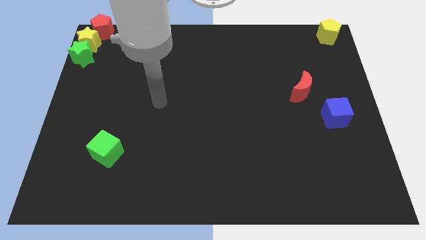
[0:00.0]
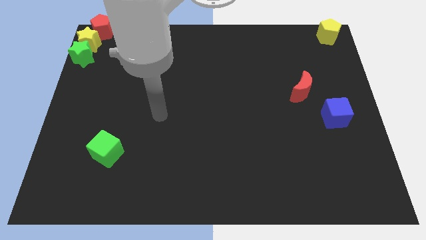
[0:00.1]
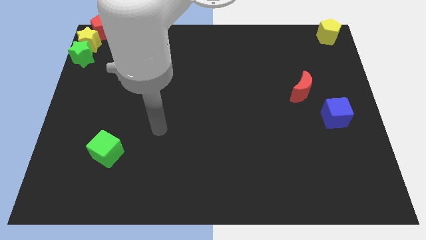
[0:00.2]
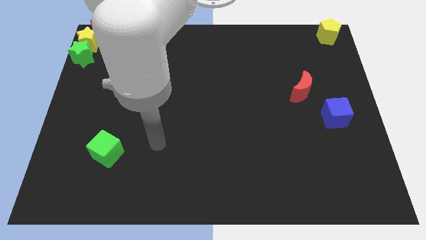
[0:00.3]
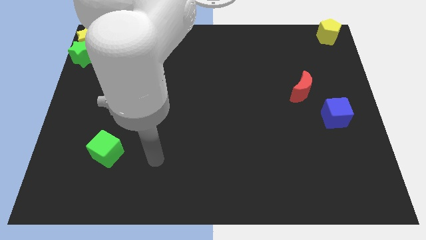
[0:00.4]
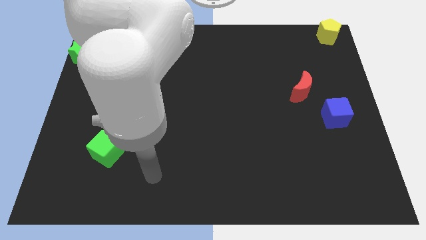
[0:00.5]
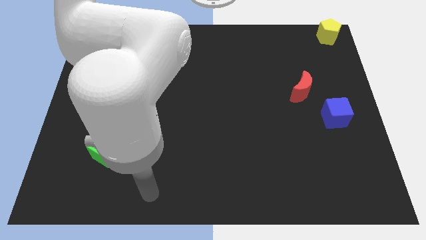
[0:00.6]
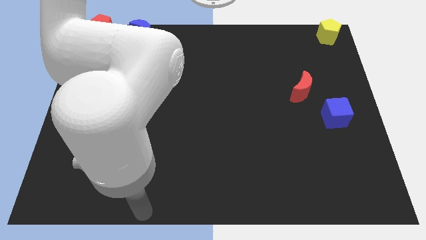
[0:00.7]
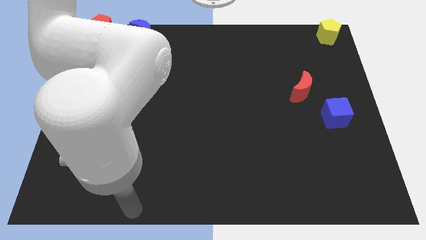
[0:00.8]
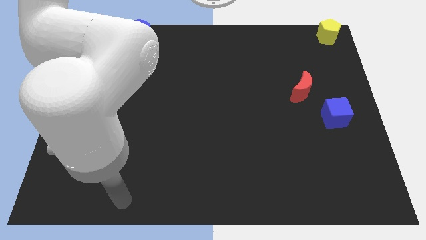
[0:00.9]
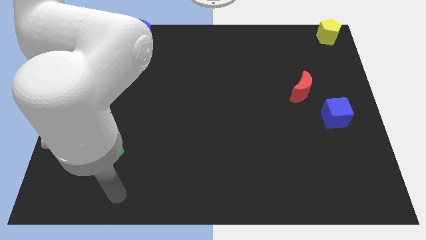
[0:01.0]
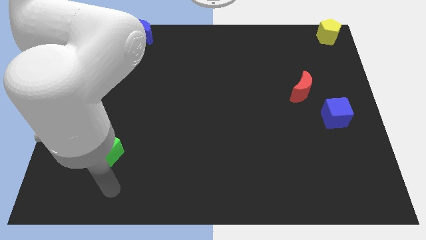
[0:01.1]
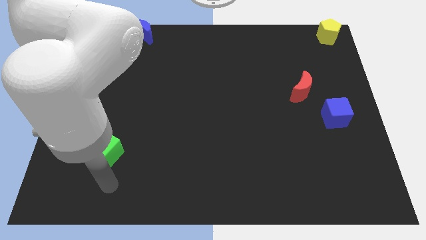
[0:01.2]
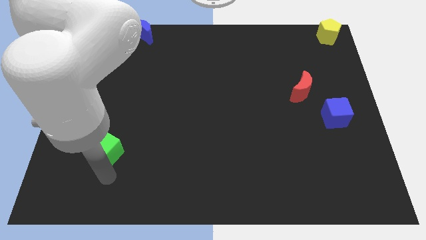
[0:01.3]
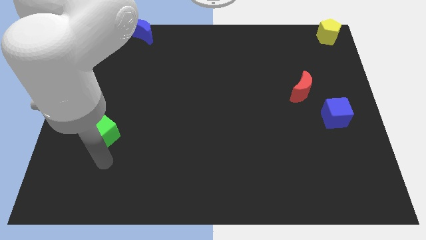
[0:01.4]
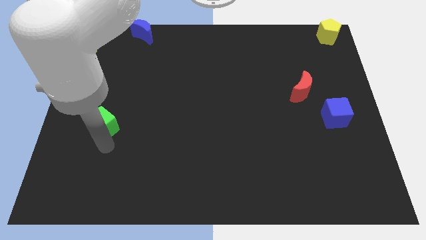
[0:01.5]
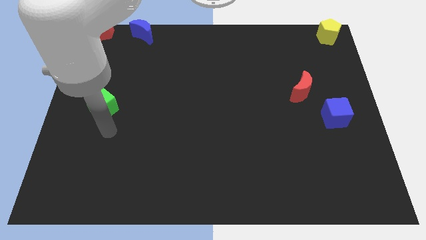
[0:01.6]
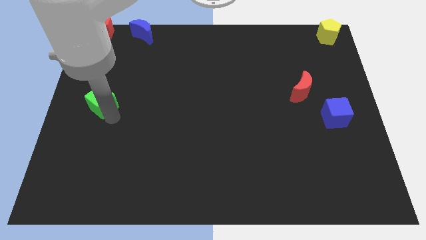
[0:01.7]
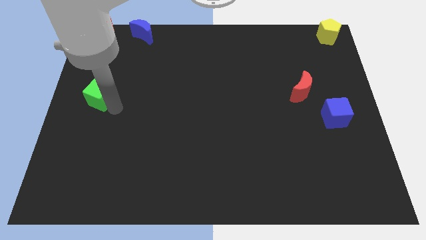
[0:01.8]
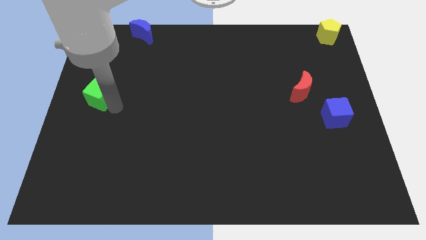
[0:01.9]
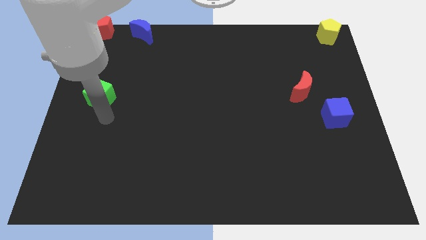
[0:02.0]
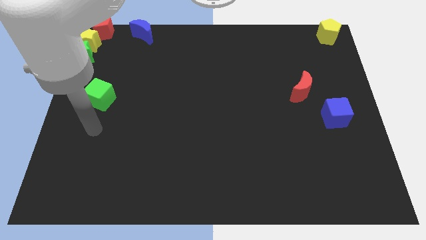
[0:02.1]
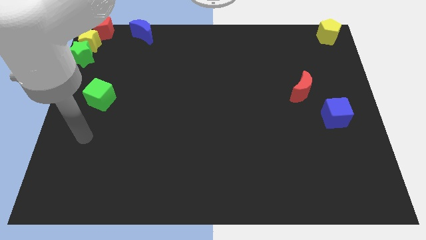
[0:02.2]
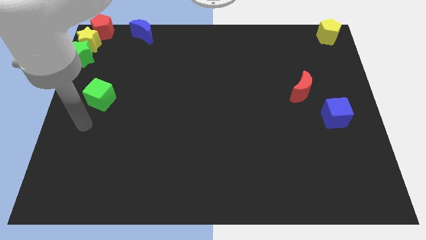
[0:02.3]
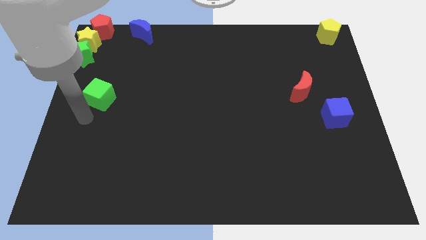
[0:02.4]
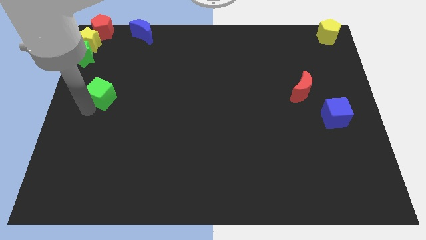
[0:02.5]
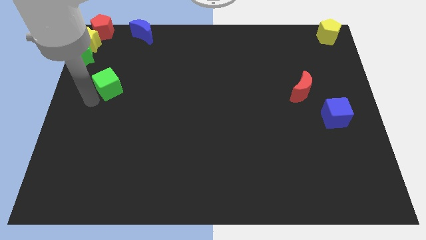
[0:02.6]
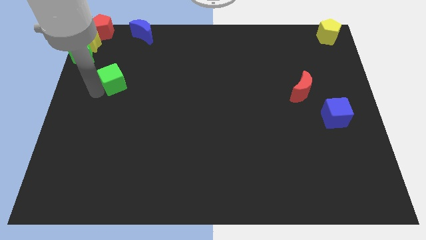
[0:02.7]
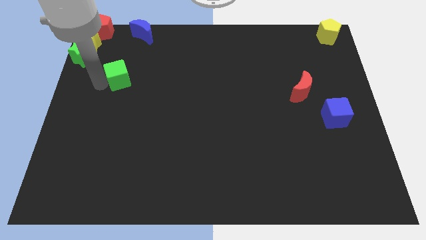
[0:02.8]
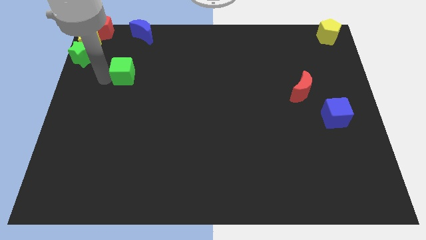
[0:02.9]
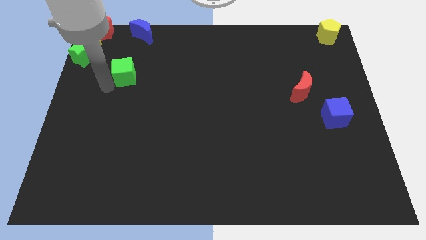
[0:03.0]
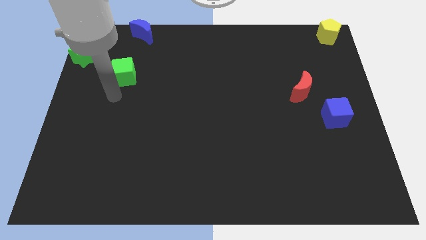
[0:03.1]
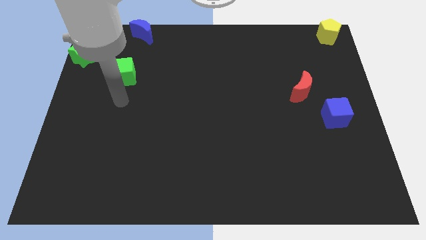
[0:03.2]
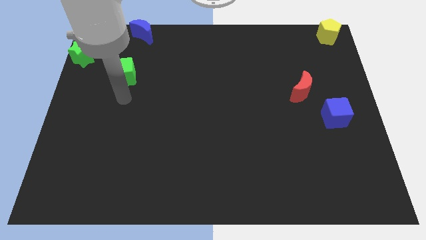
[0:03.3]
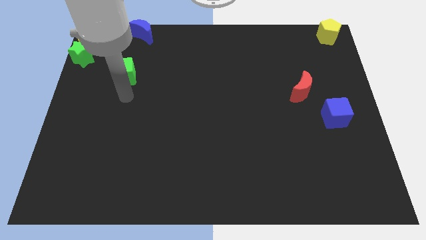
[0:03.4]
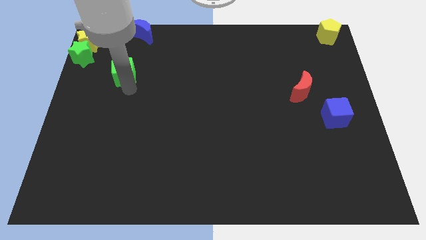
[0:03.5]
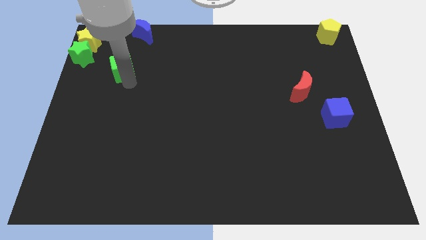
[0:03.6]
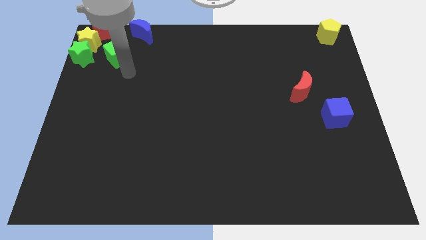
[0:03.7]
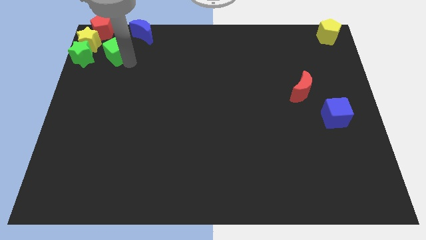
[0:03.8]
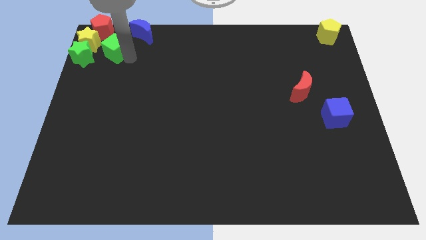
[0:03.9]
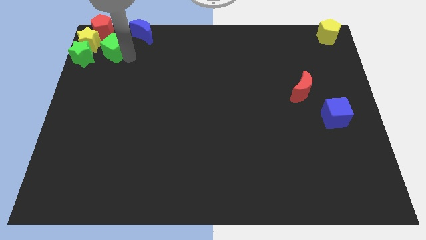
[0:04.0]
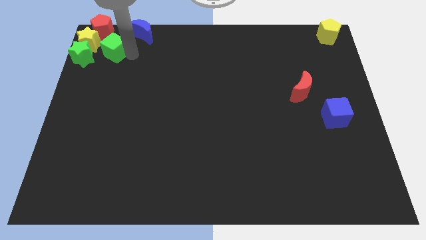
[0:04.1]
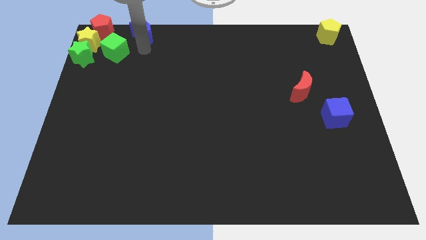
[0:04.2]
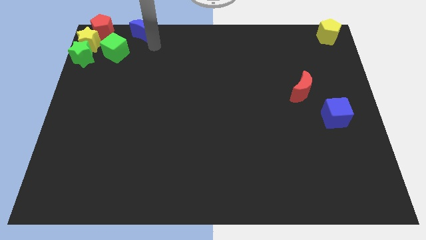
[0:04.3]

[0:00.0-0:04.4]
move the green cube to the right of the yellow star

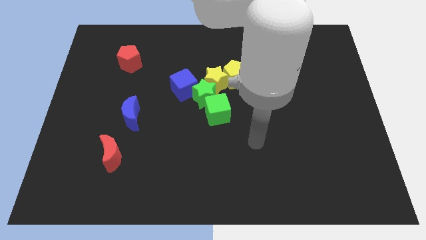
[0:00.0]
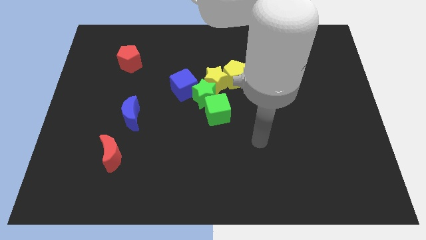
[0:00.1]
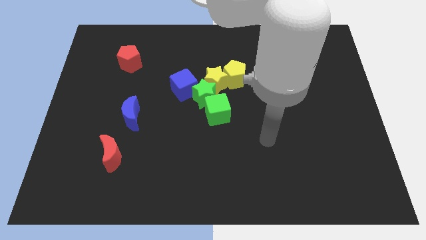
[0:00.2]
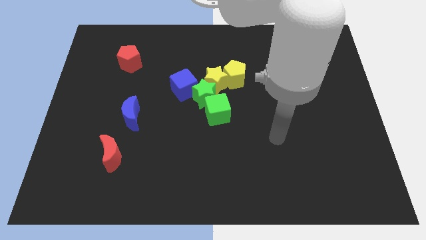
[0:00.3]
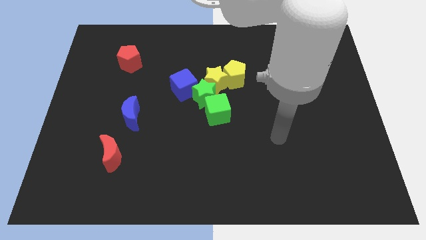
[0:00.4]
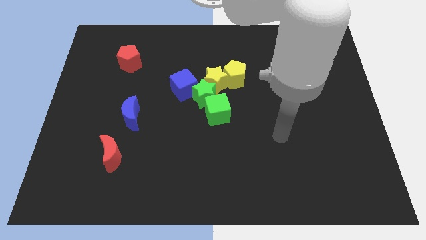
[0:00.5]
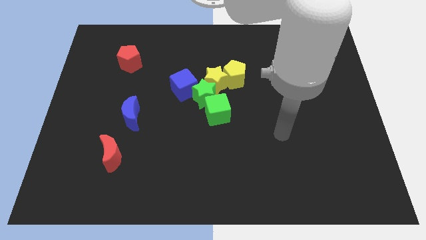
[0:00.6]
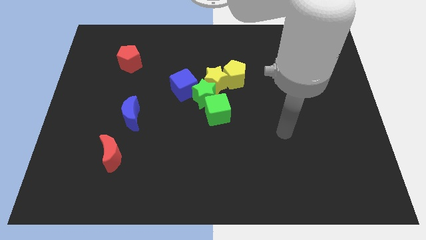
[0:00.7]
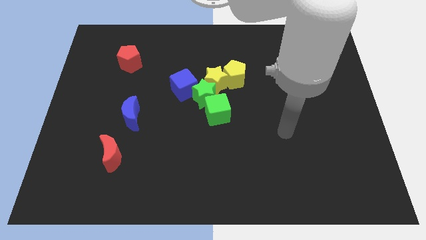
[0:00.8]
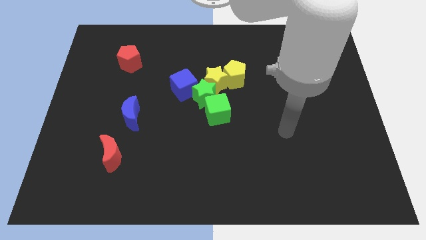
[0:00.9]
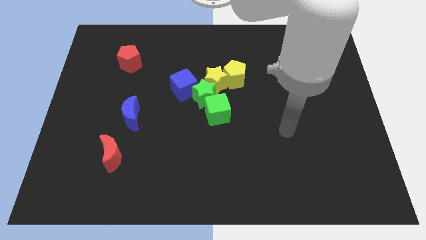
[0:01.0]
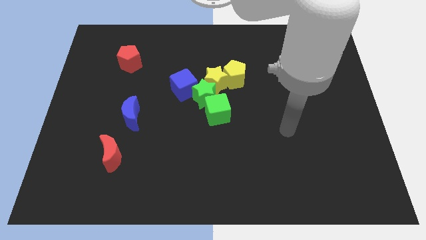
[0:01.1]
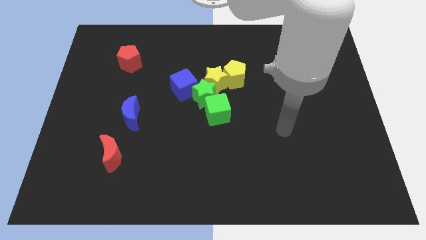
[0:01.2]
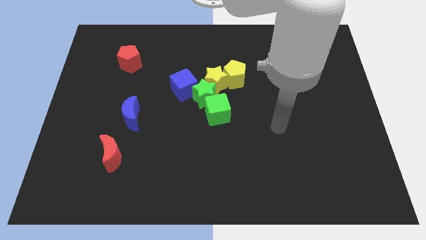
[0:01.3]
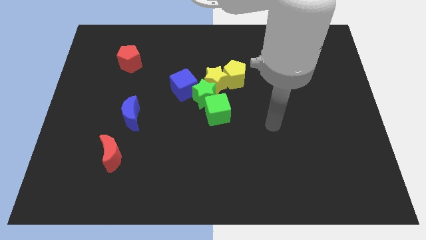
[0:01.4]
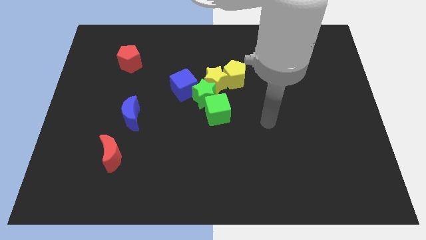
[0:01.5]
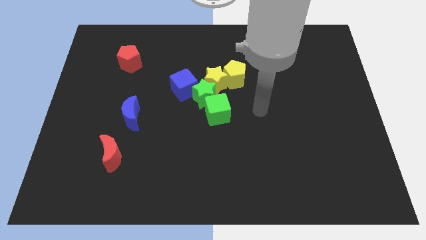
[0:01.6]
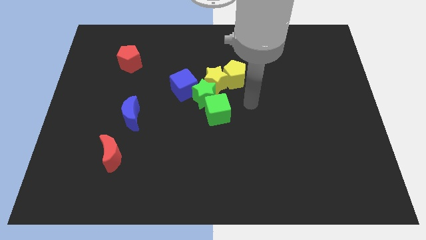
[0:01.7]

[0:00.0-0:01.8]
point your arm at the right side of the green cube

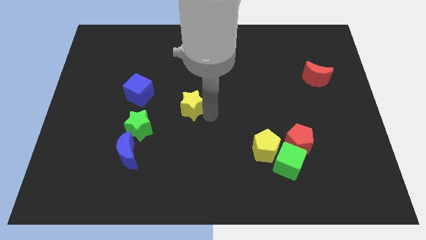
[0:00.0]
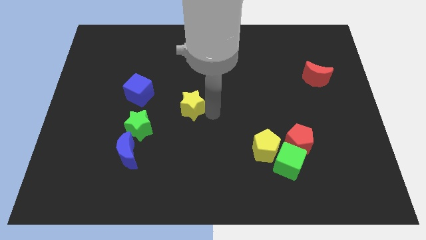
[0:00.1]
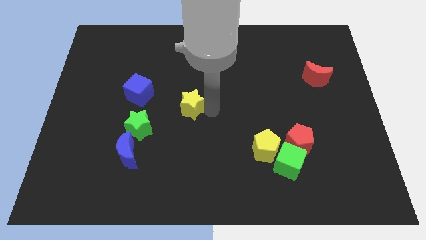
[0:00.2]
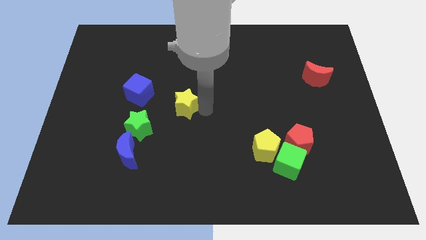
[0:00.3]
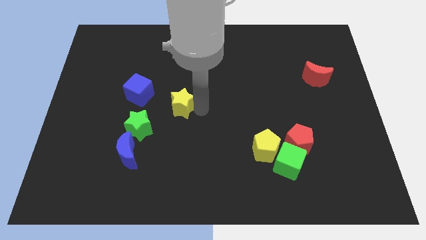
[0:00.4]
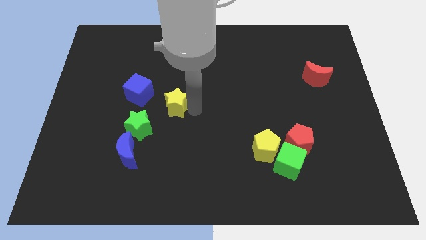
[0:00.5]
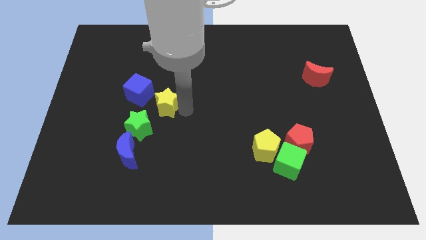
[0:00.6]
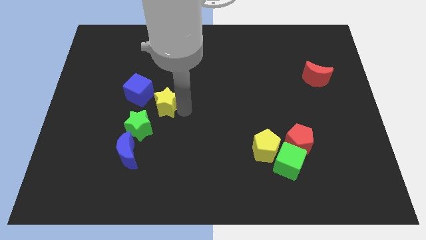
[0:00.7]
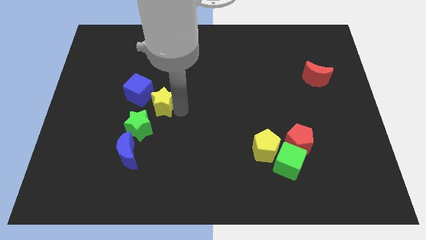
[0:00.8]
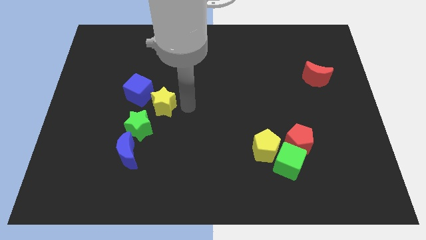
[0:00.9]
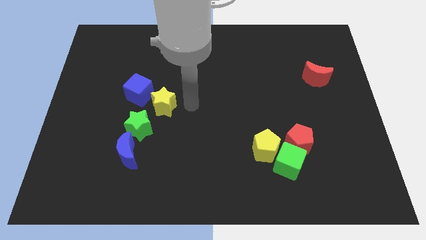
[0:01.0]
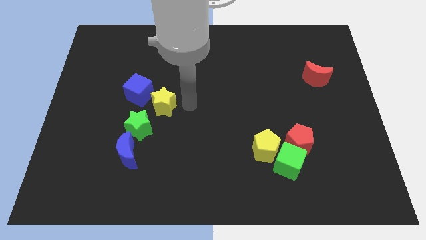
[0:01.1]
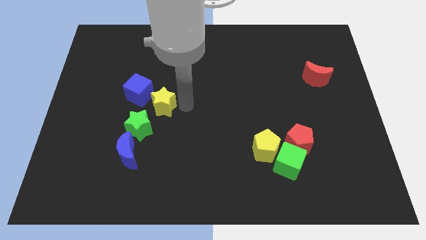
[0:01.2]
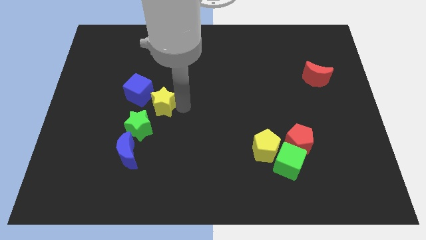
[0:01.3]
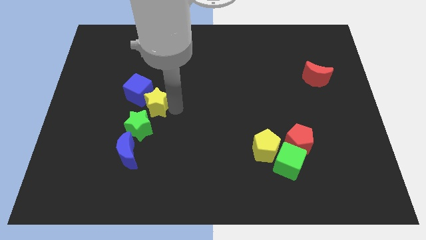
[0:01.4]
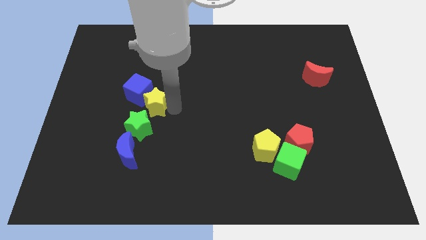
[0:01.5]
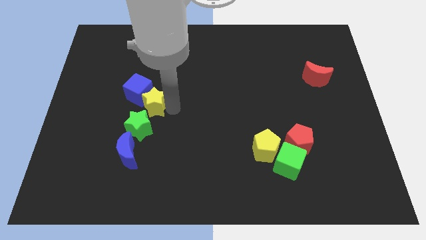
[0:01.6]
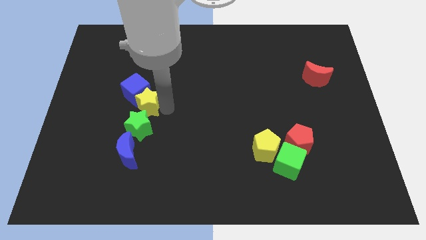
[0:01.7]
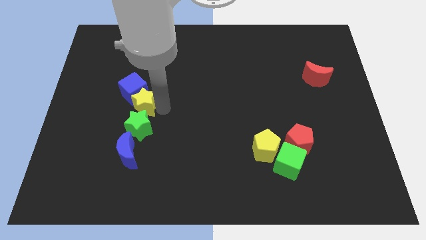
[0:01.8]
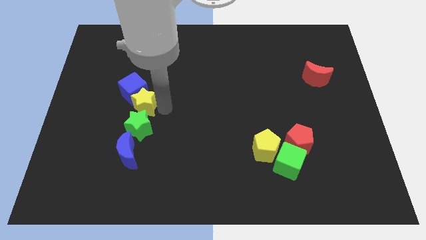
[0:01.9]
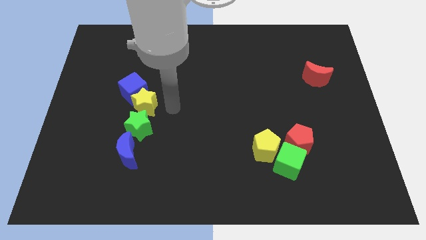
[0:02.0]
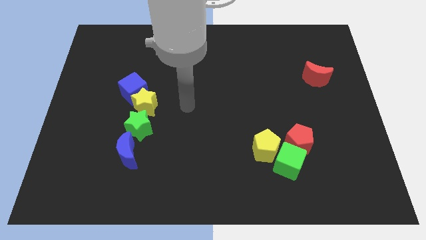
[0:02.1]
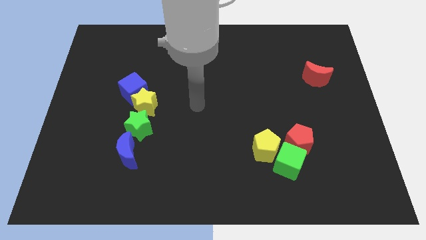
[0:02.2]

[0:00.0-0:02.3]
move the yellow star to right of the blue cube

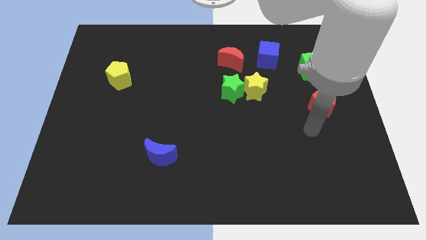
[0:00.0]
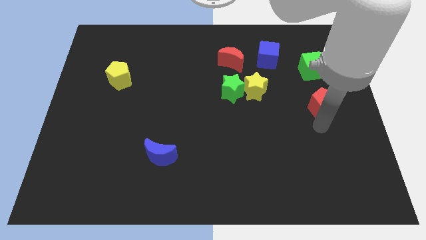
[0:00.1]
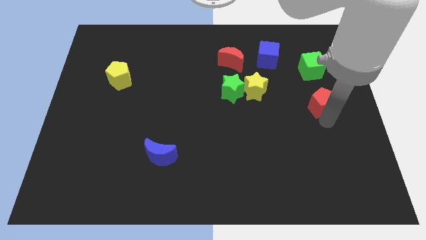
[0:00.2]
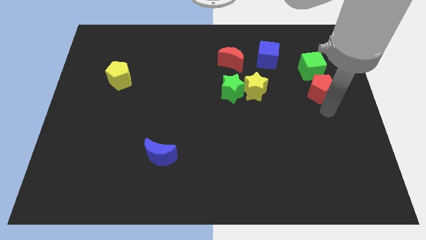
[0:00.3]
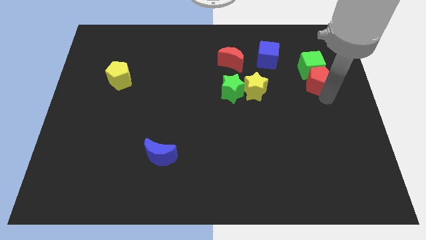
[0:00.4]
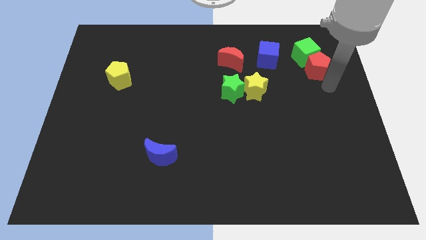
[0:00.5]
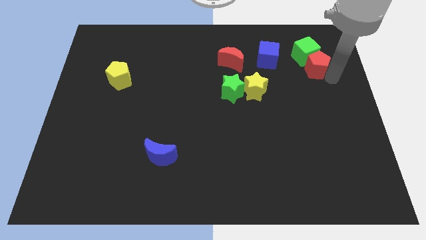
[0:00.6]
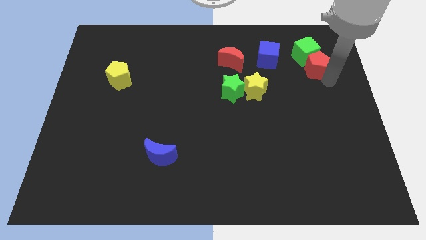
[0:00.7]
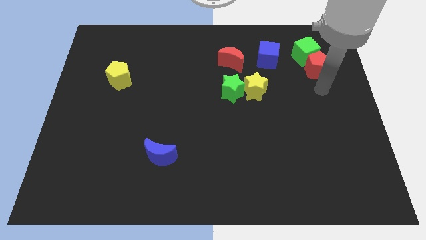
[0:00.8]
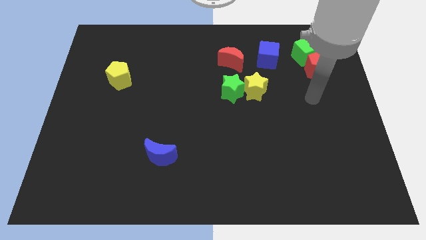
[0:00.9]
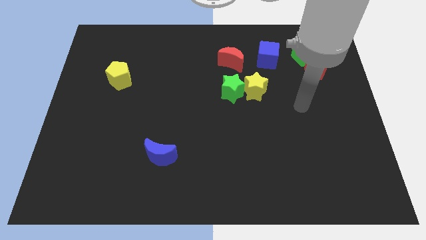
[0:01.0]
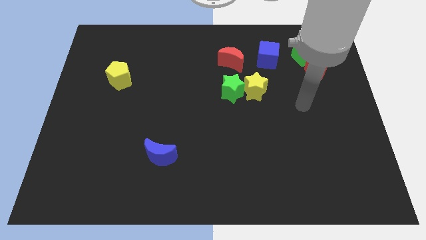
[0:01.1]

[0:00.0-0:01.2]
push the green cube with the red pentagon towards the top right of the board
